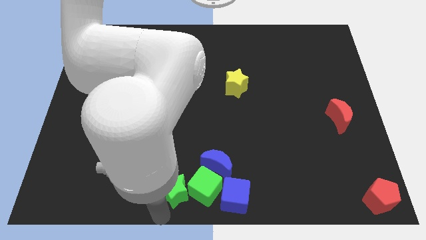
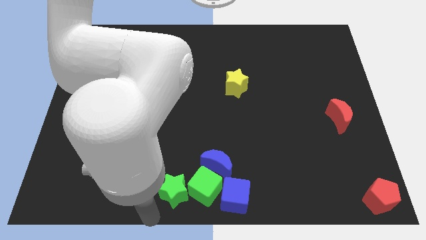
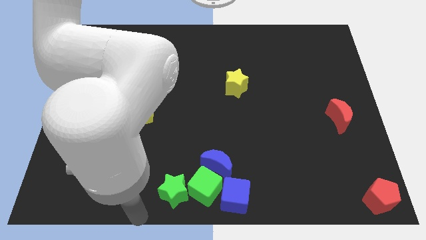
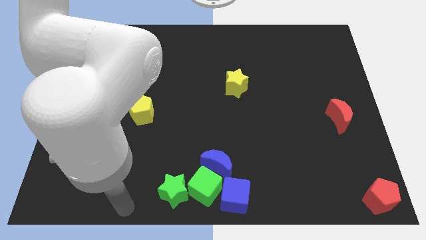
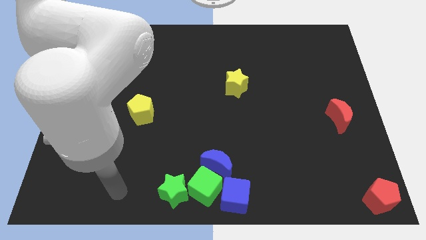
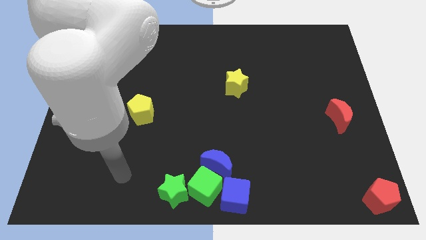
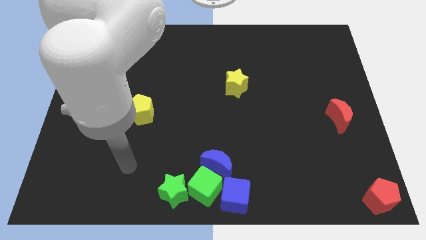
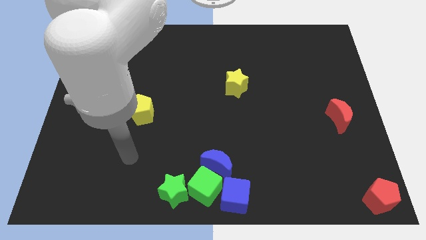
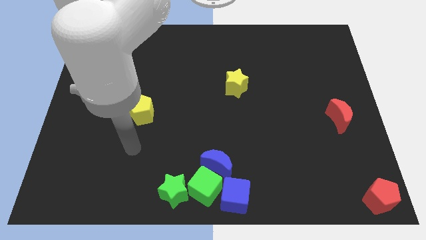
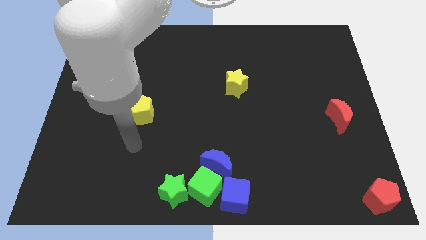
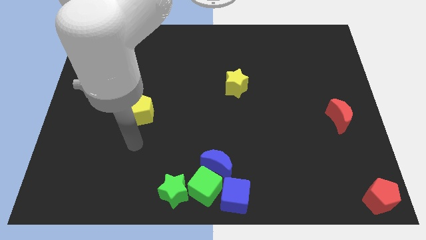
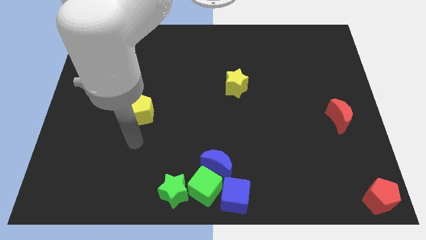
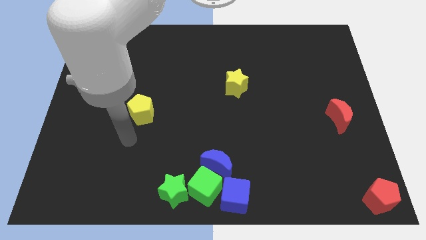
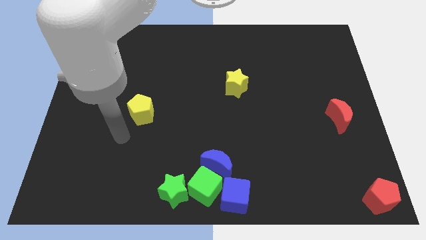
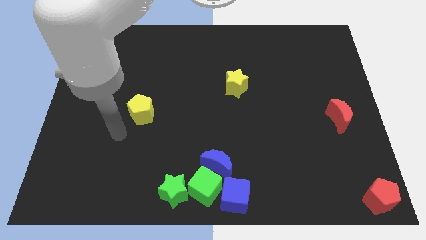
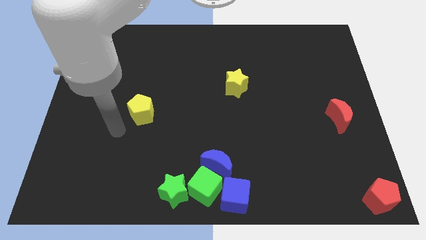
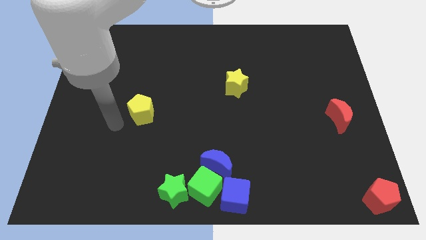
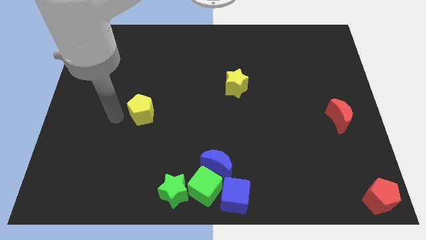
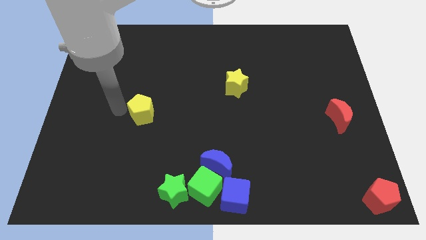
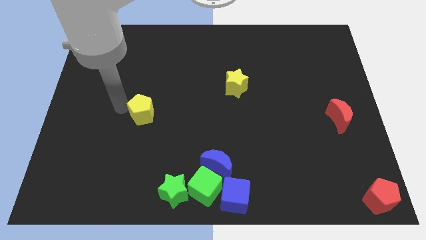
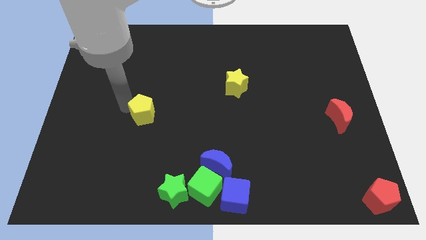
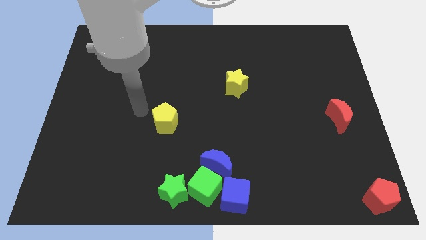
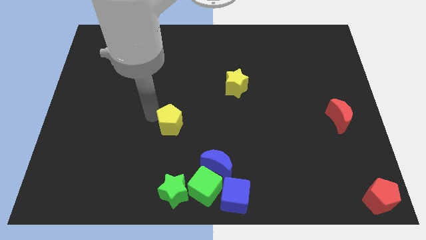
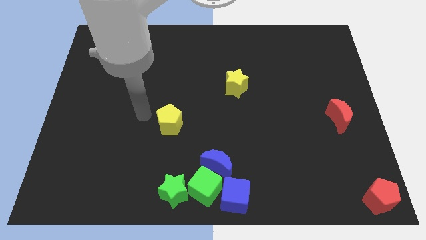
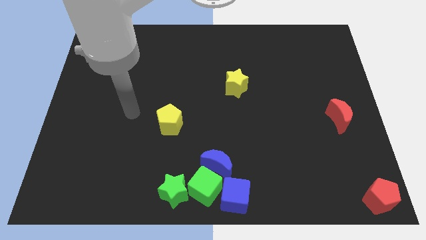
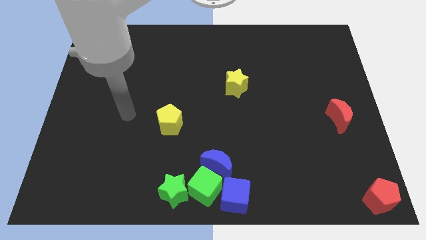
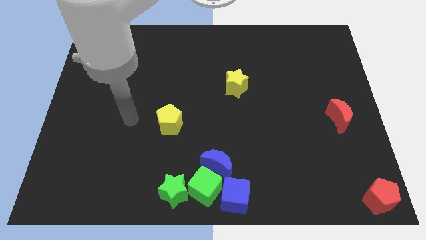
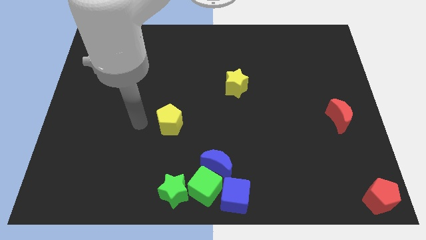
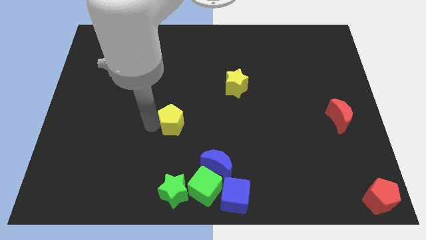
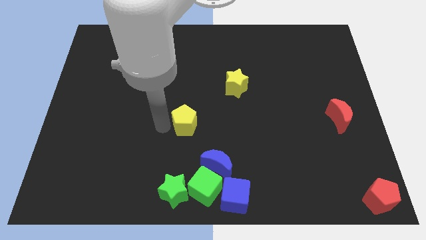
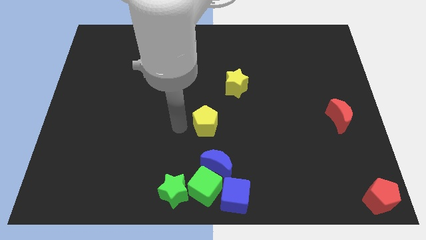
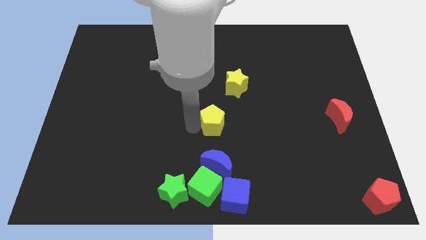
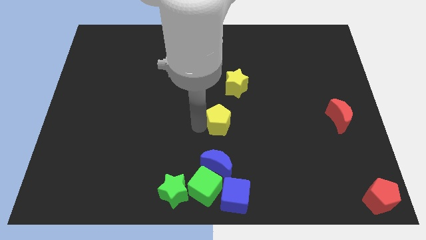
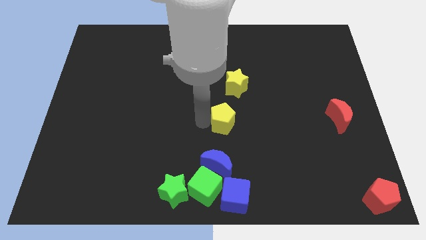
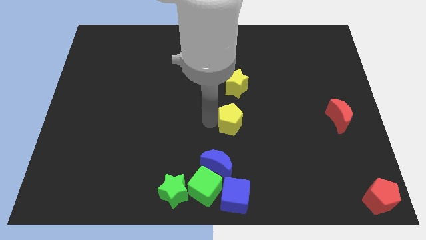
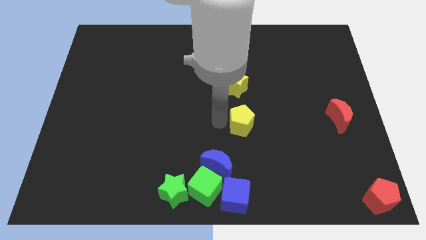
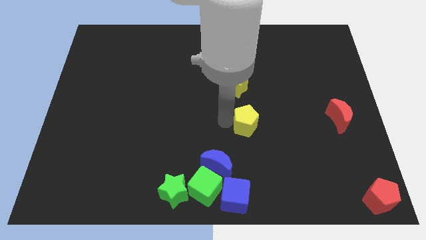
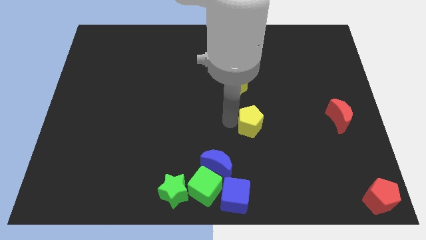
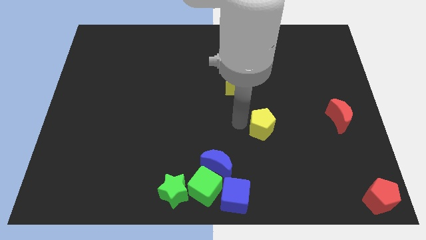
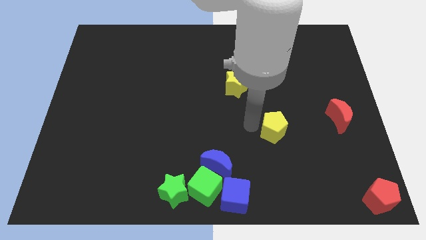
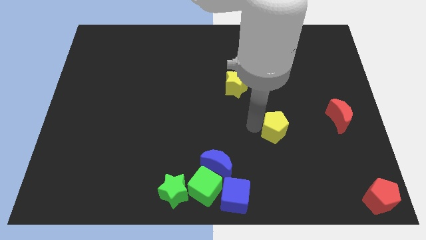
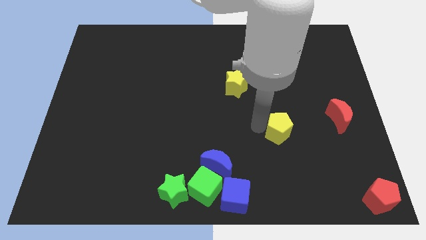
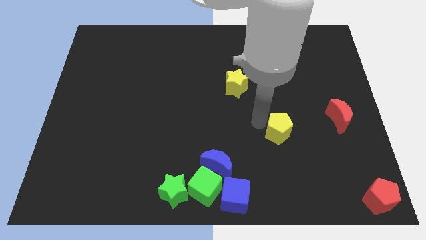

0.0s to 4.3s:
slide the yellow pentagon towards the right side of the red crescent

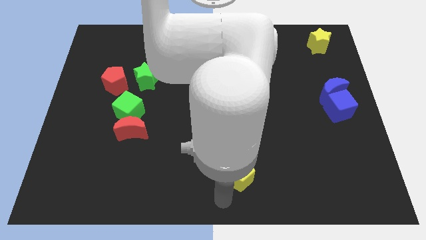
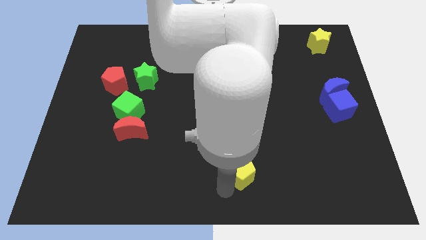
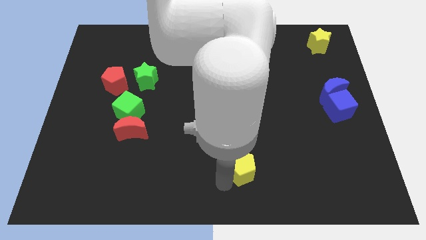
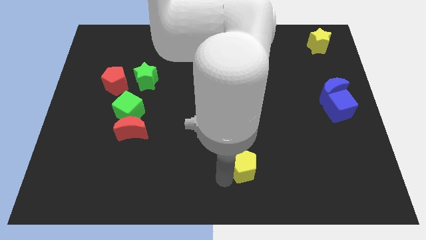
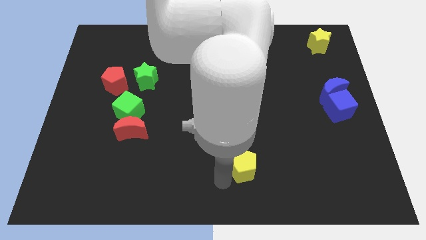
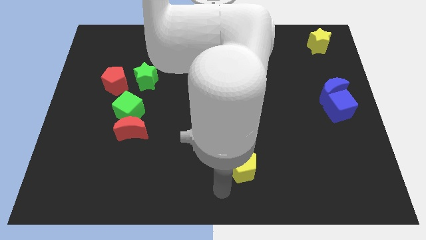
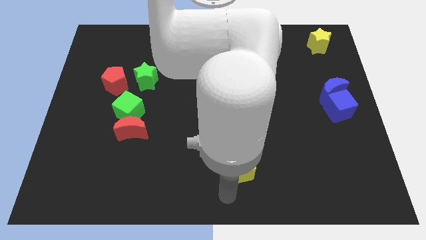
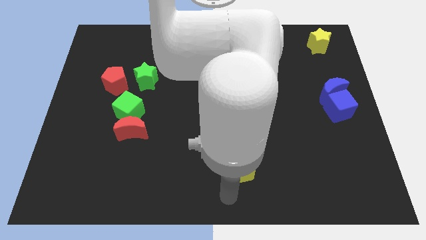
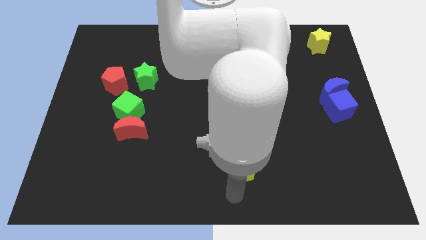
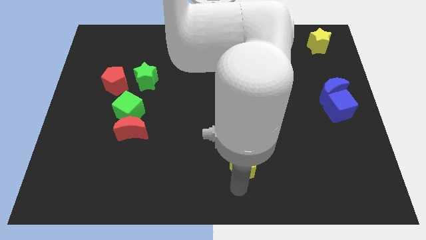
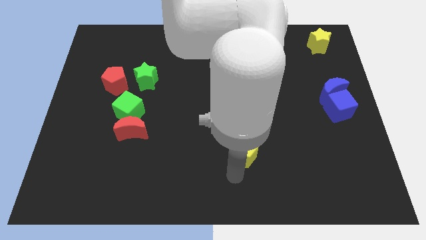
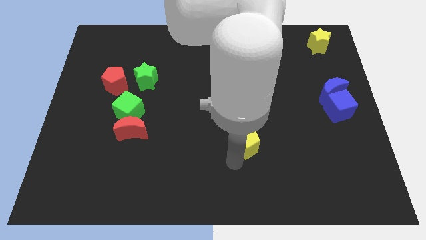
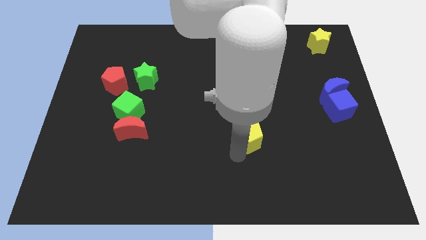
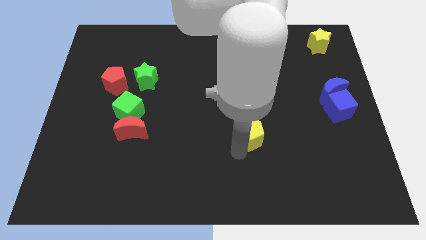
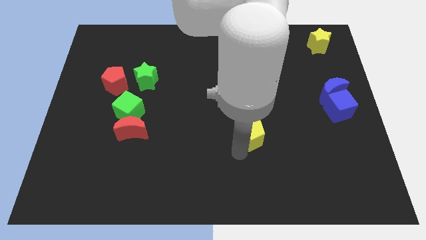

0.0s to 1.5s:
push the yellow star towards the top of the board

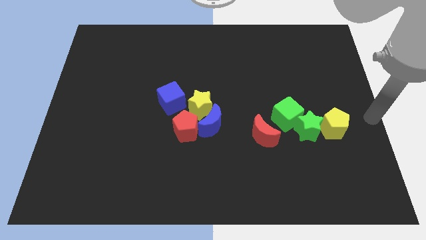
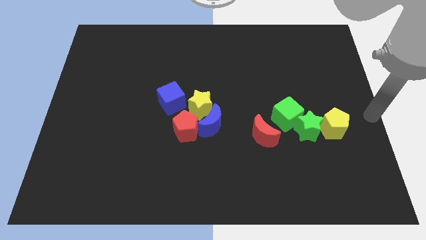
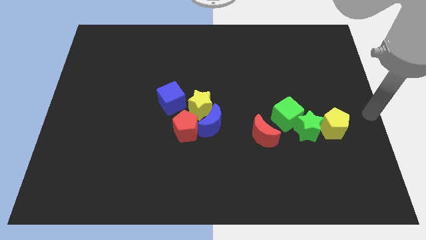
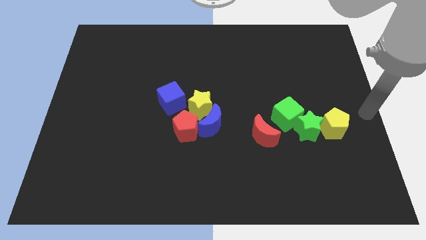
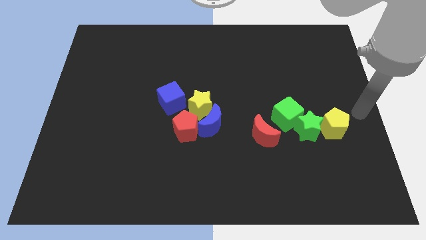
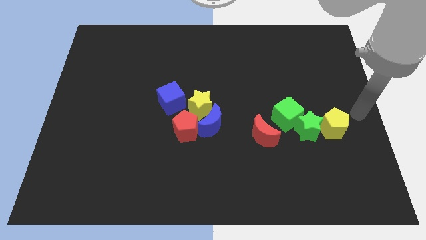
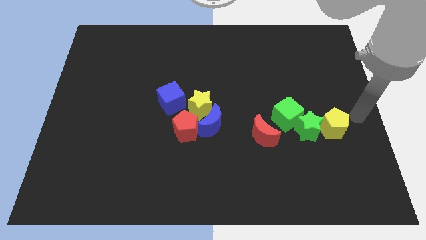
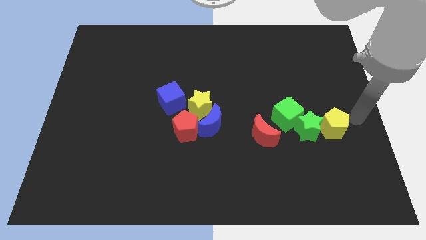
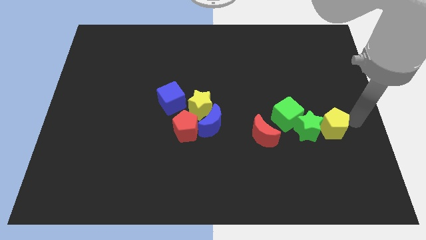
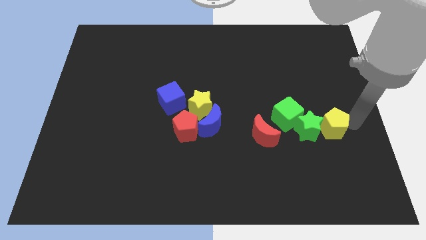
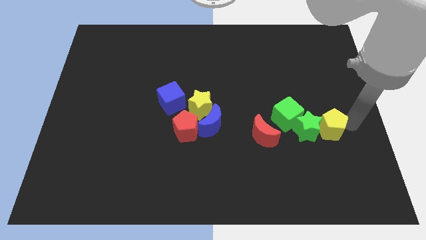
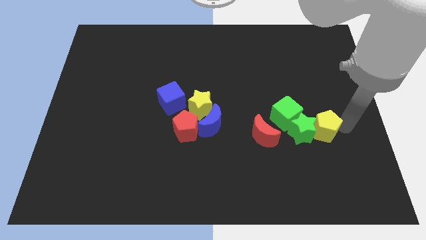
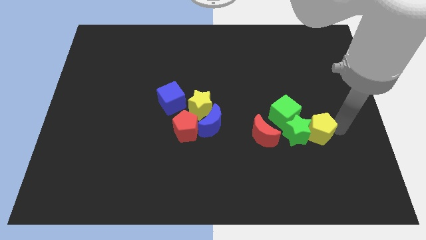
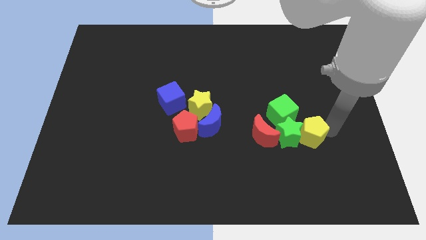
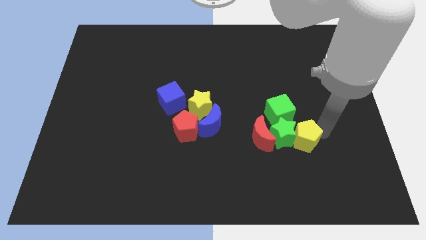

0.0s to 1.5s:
push yellow pentagon in to green star

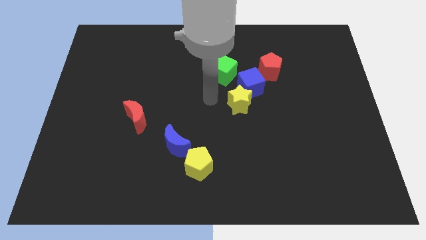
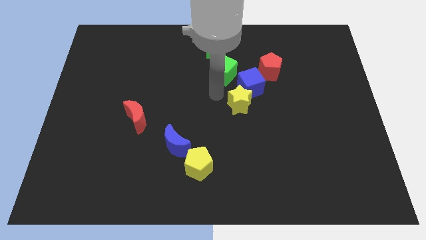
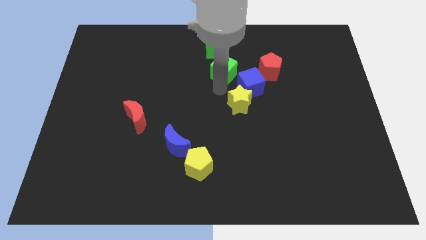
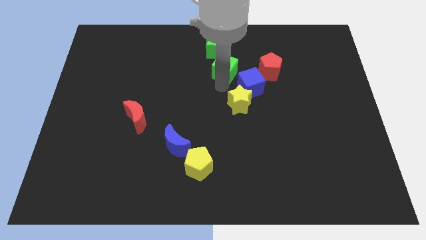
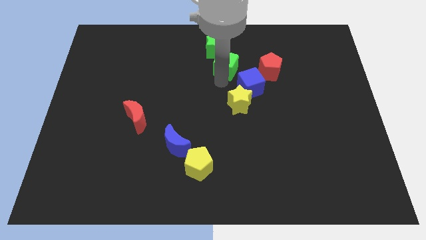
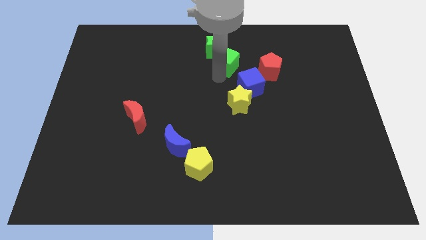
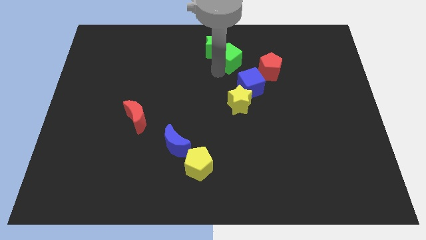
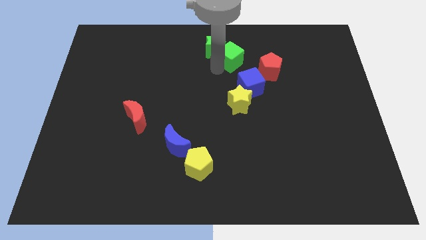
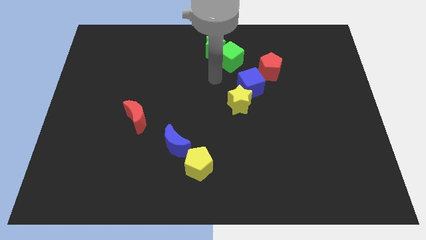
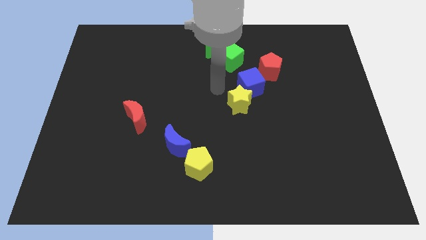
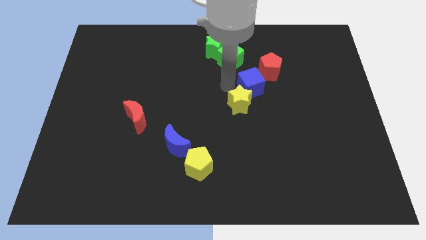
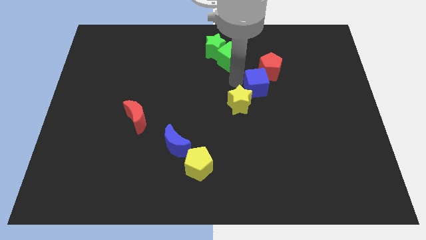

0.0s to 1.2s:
push the green cube into the green star

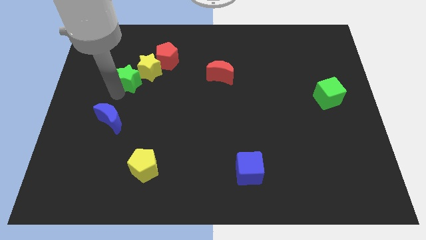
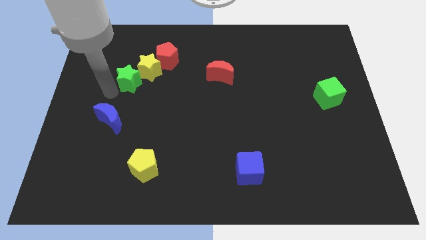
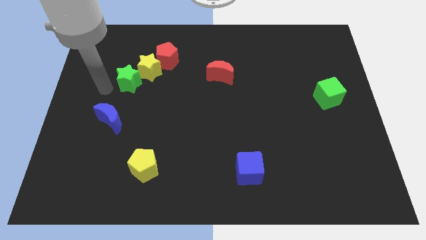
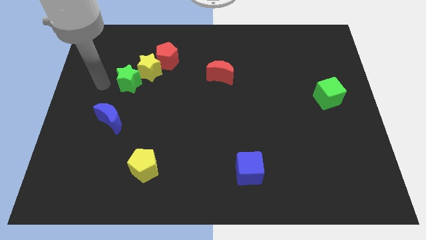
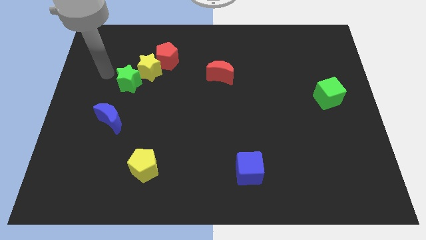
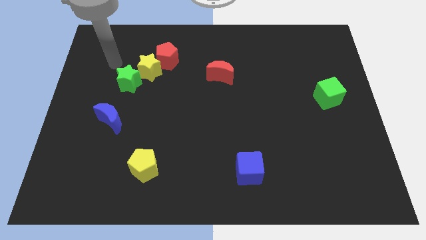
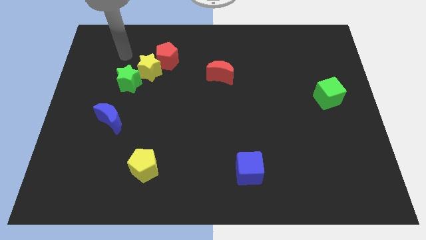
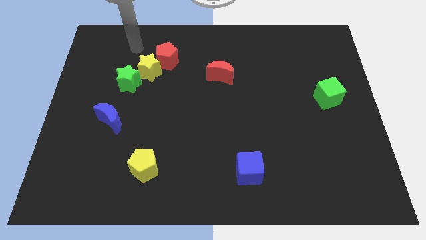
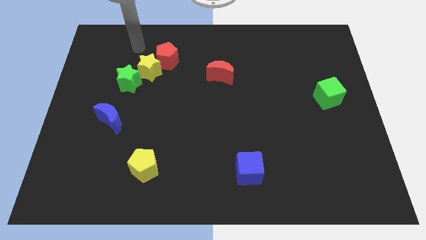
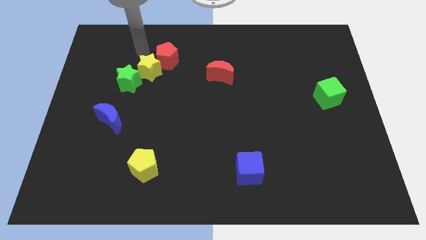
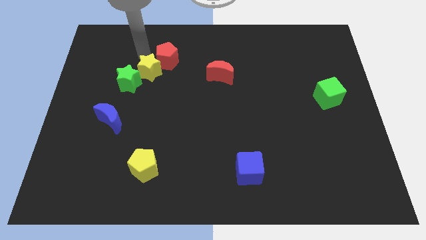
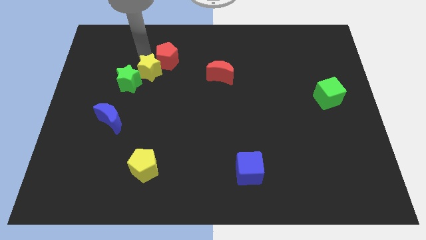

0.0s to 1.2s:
move your arm to the top of the yellow star
